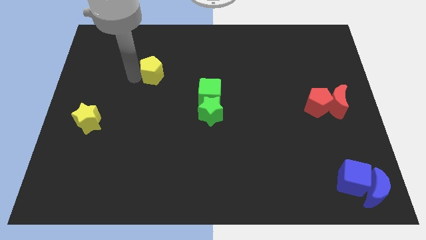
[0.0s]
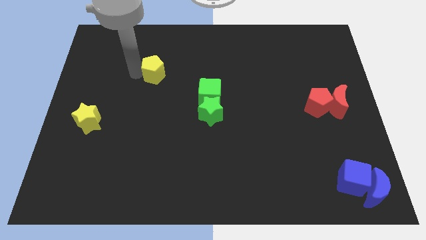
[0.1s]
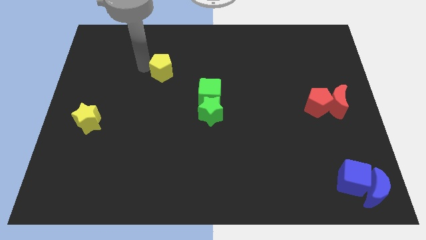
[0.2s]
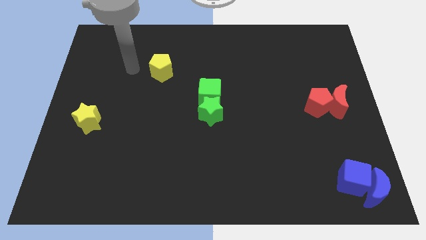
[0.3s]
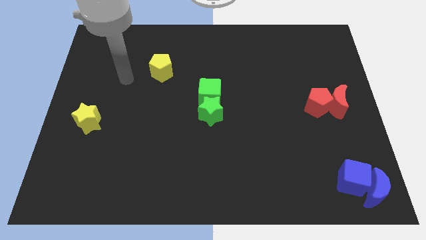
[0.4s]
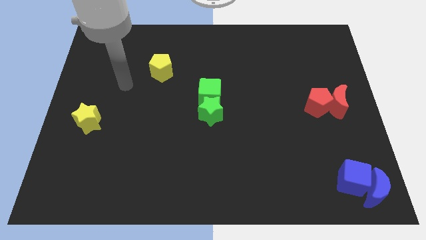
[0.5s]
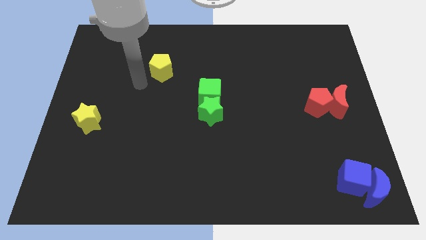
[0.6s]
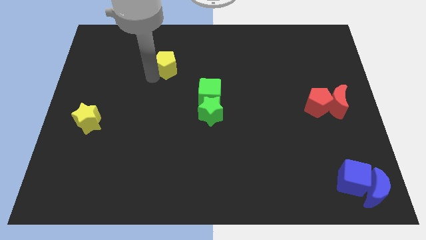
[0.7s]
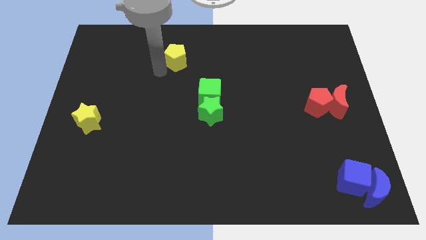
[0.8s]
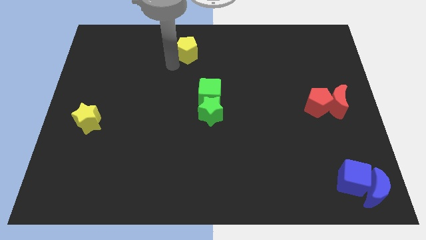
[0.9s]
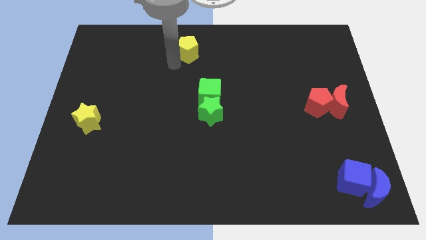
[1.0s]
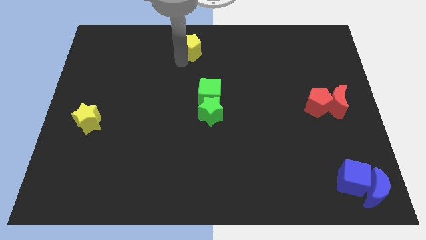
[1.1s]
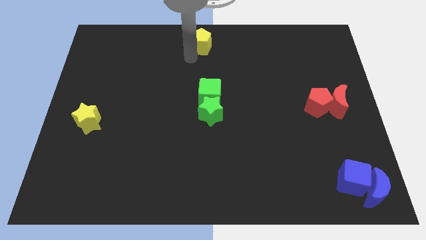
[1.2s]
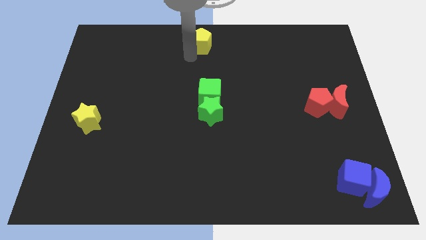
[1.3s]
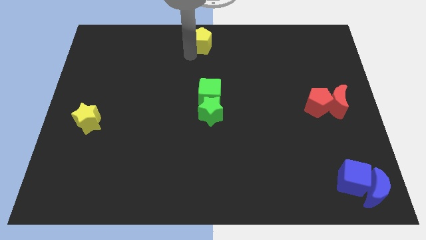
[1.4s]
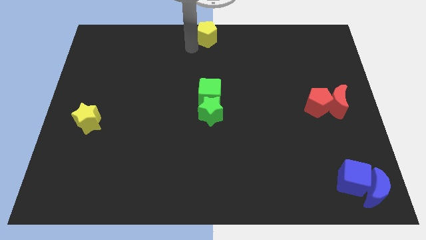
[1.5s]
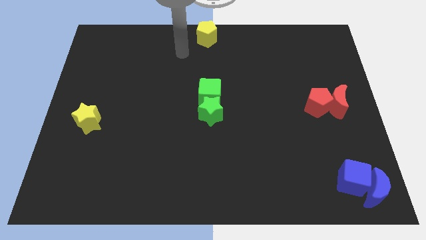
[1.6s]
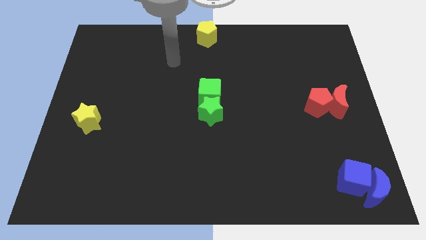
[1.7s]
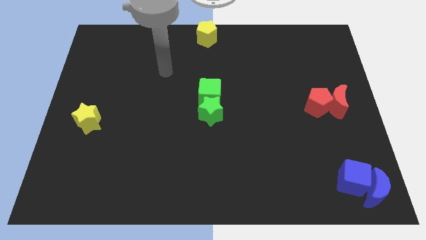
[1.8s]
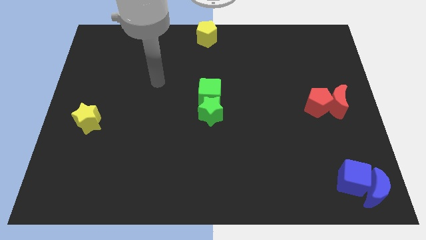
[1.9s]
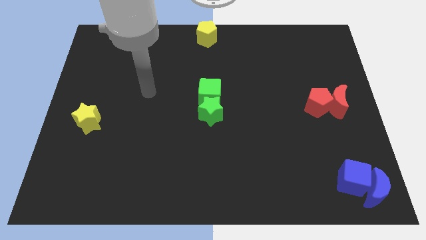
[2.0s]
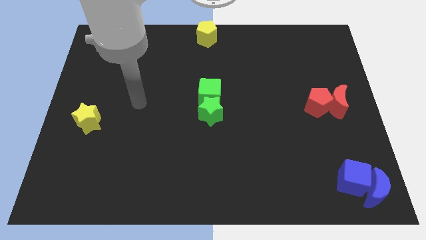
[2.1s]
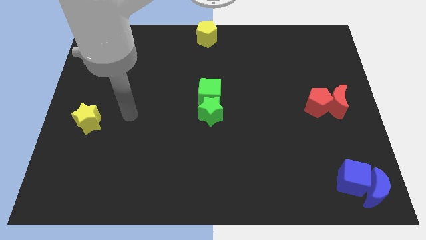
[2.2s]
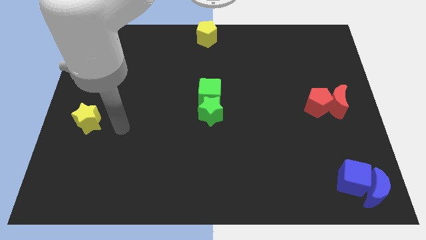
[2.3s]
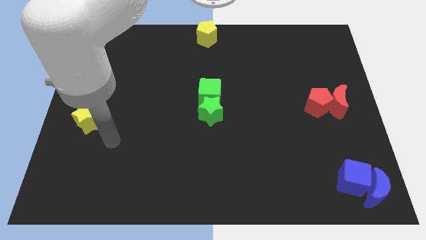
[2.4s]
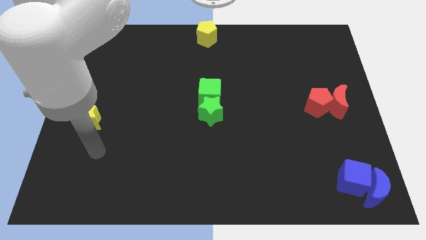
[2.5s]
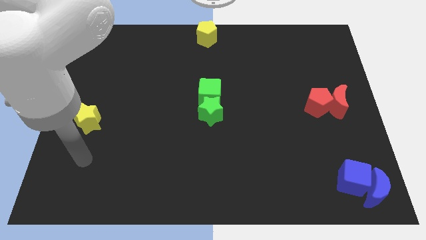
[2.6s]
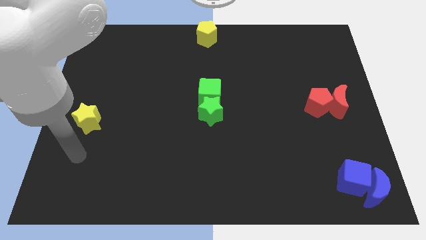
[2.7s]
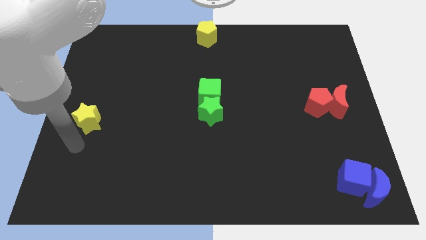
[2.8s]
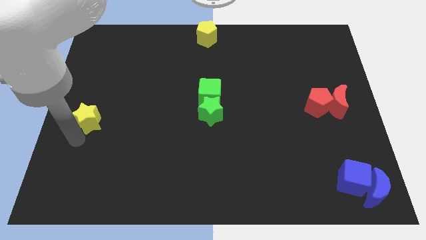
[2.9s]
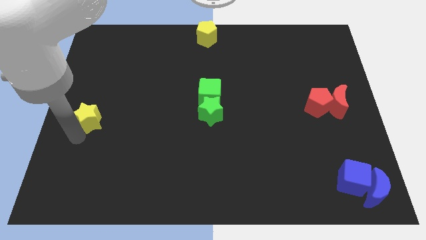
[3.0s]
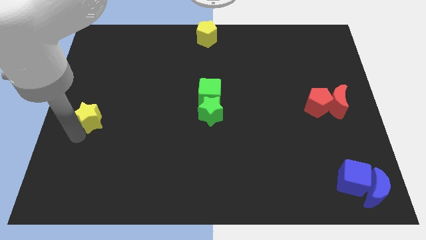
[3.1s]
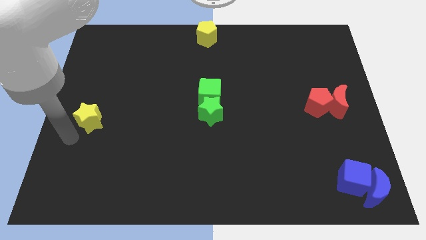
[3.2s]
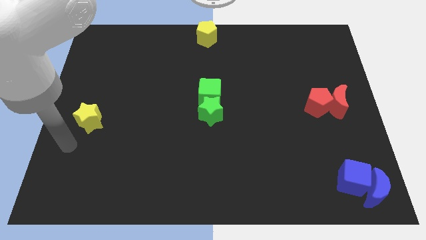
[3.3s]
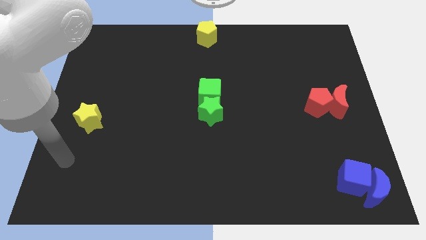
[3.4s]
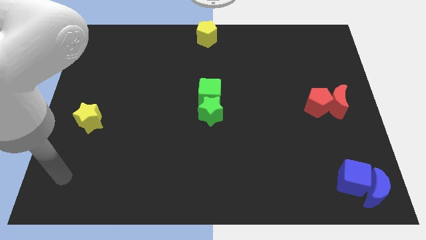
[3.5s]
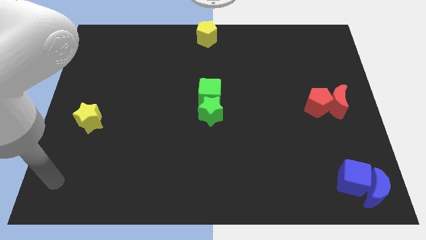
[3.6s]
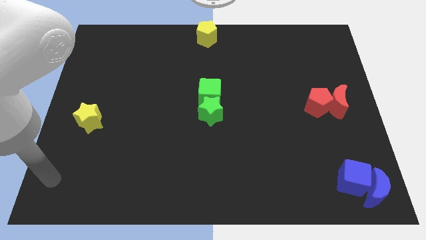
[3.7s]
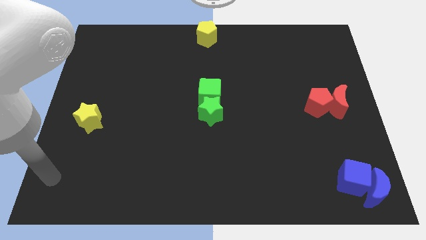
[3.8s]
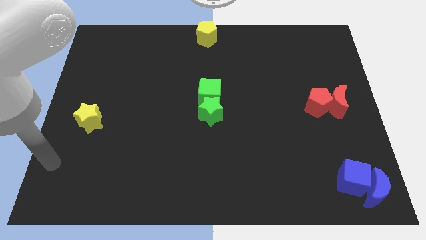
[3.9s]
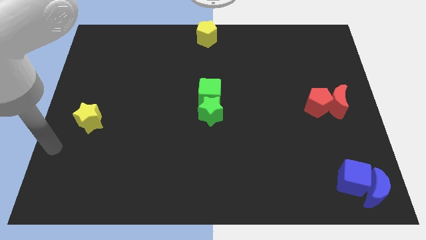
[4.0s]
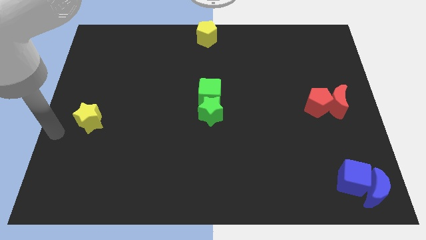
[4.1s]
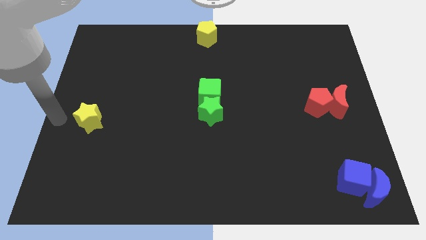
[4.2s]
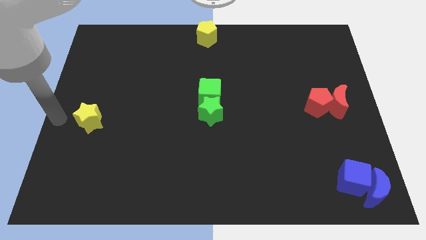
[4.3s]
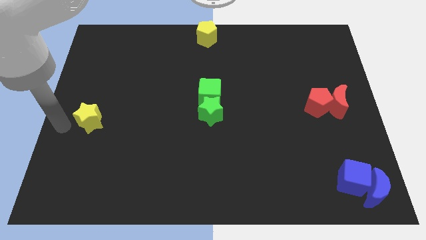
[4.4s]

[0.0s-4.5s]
move the arm away from the yellow pentagon

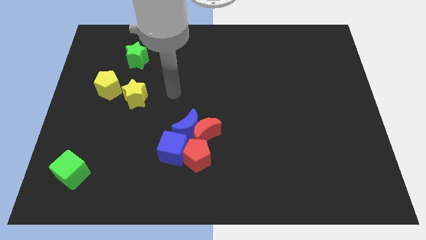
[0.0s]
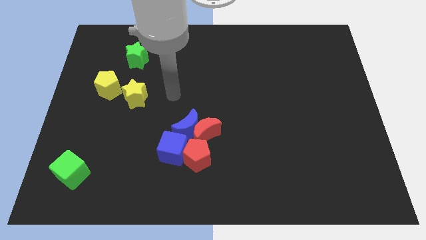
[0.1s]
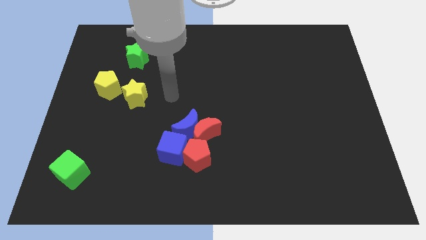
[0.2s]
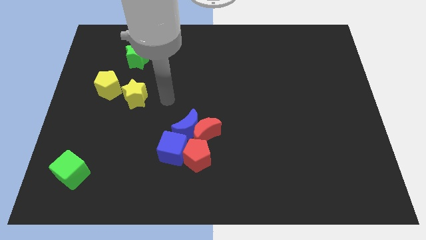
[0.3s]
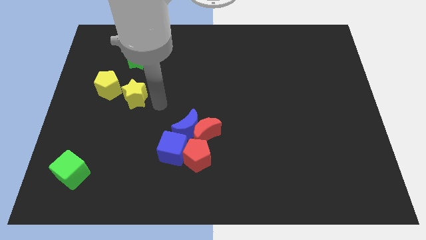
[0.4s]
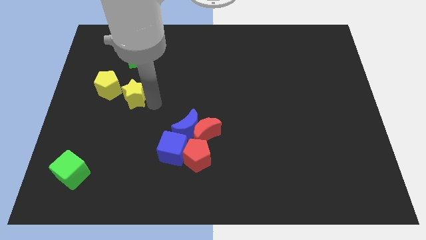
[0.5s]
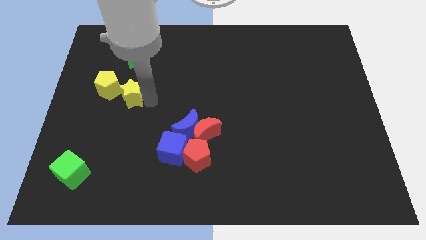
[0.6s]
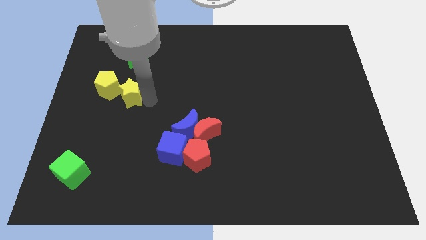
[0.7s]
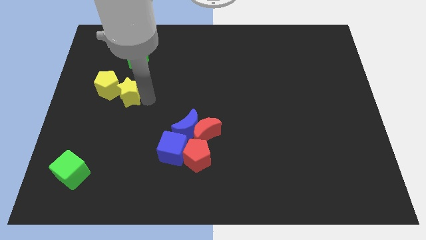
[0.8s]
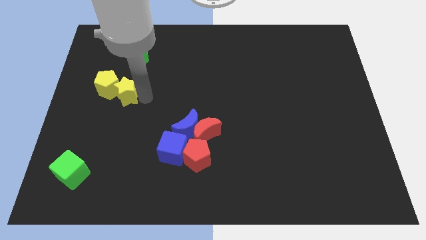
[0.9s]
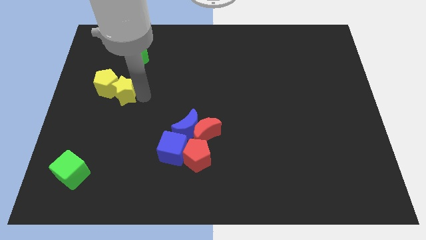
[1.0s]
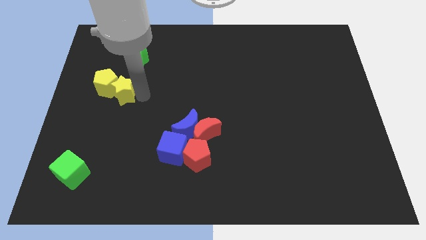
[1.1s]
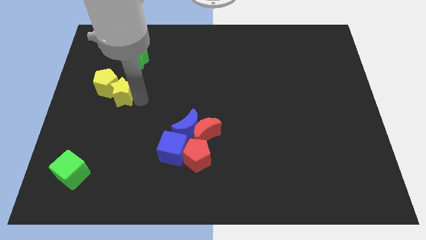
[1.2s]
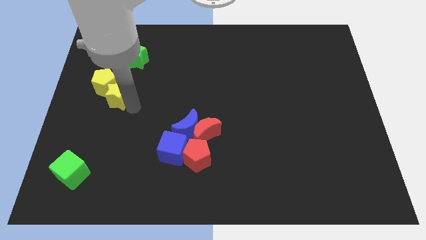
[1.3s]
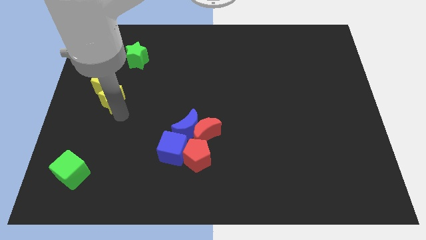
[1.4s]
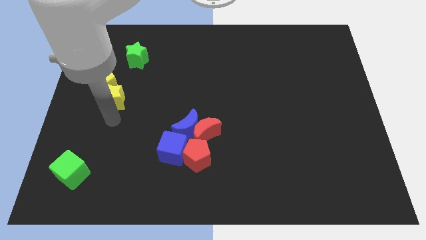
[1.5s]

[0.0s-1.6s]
put the yellow star into the yellow pentagon

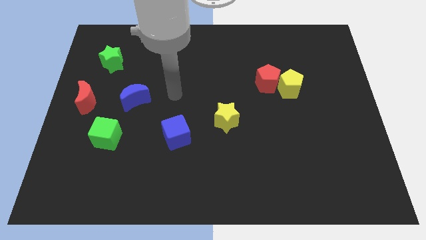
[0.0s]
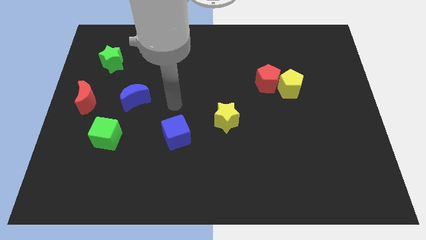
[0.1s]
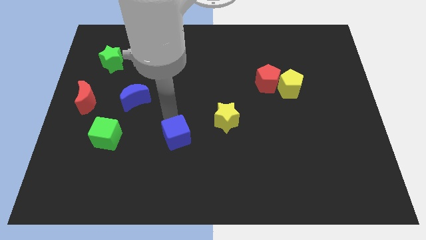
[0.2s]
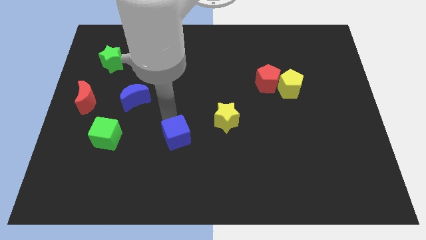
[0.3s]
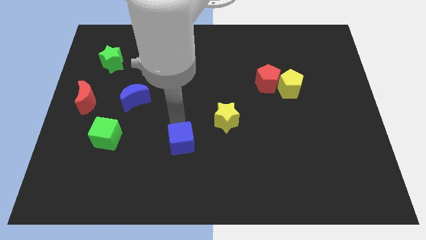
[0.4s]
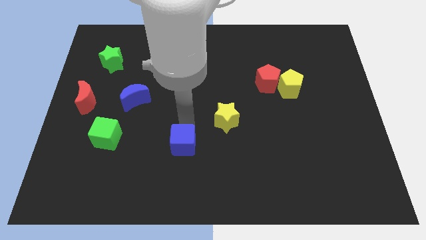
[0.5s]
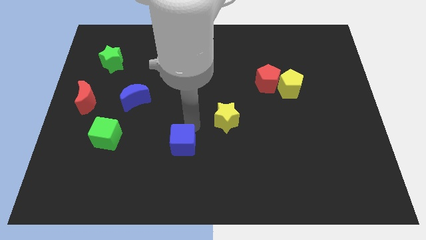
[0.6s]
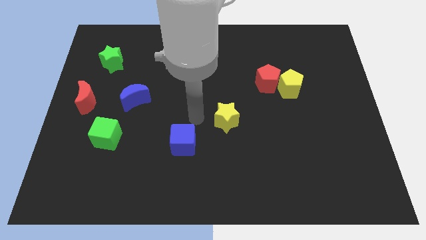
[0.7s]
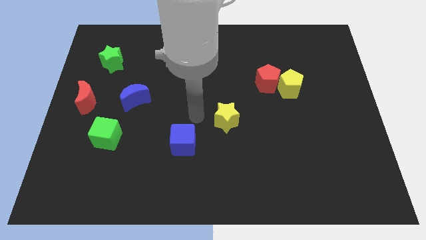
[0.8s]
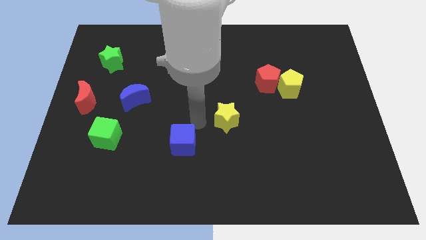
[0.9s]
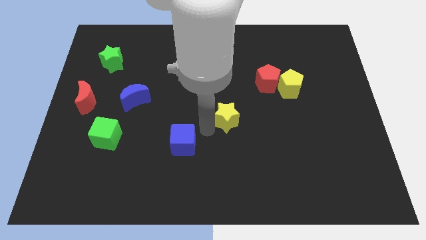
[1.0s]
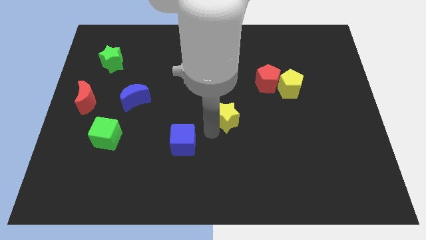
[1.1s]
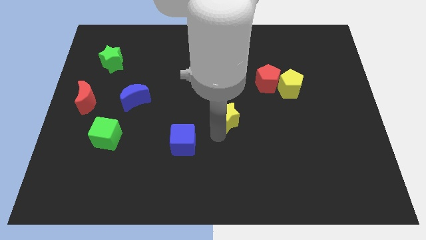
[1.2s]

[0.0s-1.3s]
push the blue cube slightly to the bottom

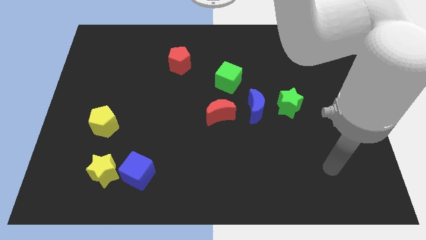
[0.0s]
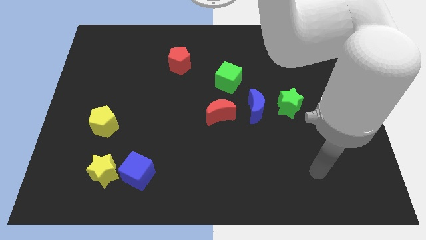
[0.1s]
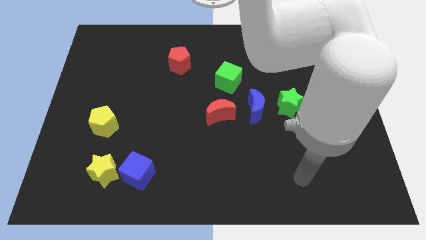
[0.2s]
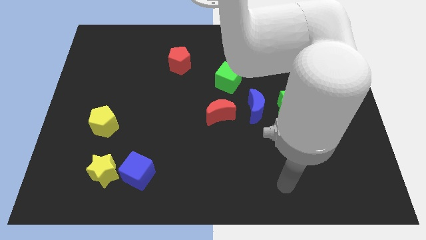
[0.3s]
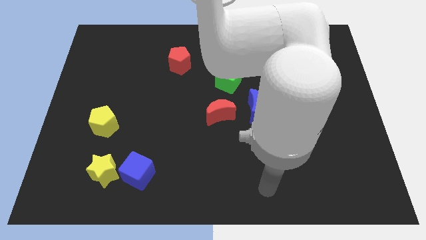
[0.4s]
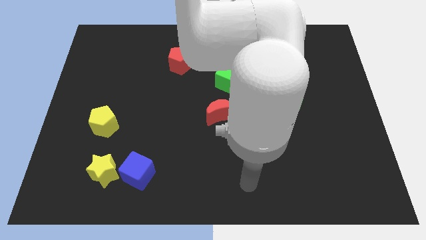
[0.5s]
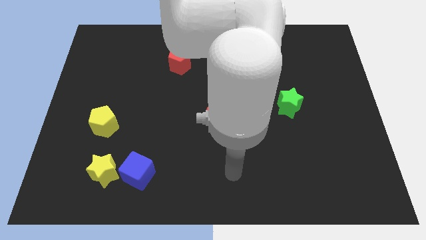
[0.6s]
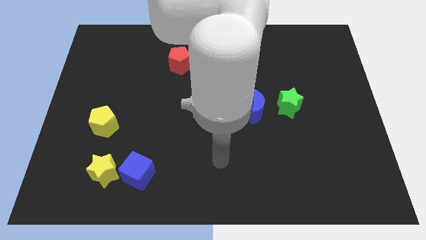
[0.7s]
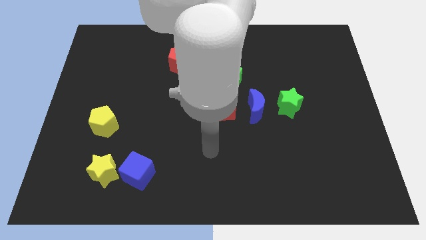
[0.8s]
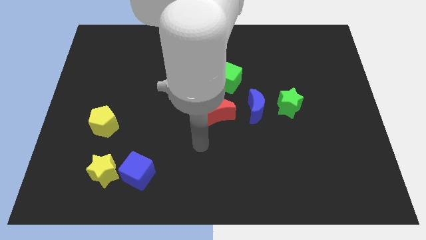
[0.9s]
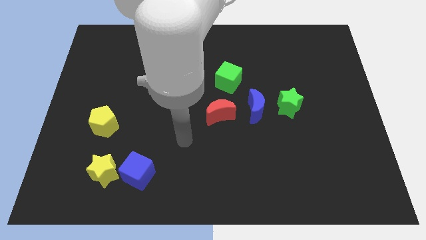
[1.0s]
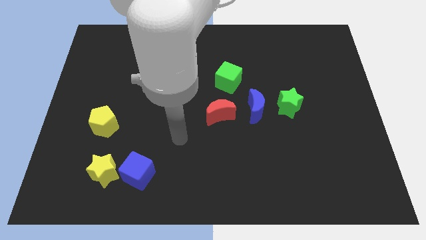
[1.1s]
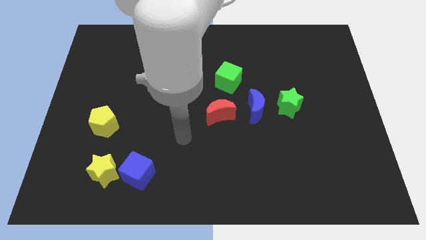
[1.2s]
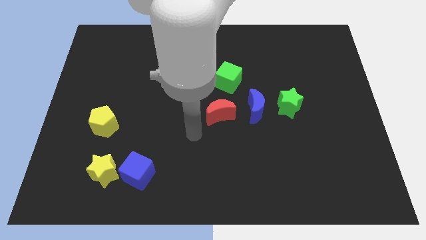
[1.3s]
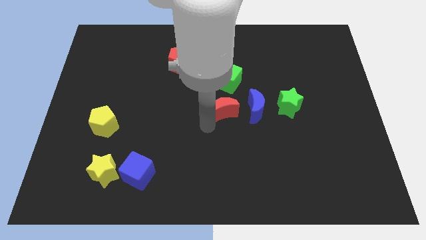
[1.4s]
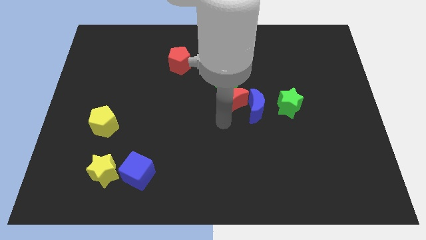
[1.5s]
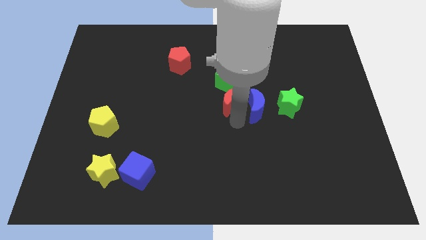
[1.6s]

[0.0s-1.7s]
slightly push the red crescent towards the blue crescent
